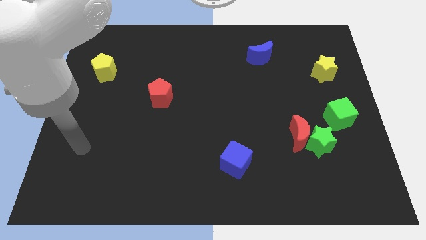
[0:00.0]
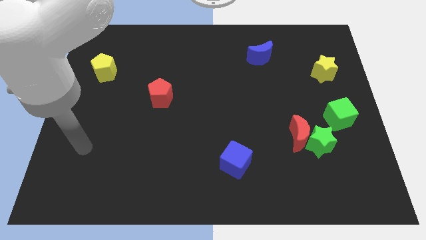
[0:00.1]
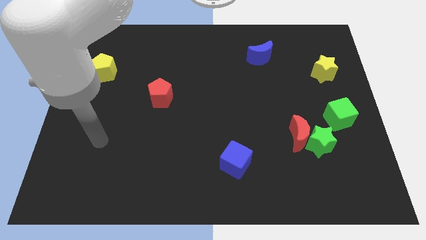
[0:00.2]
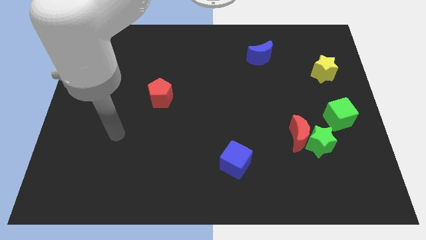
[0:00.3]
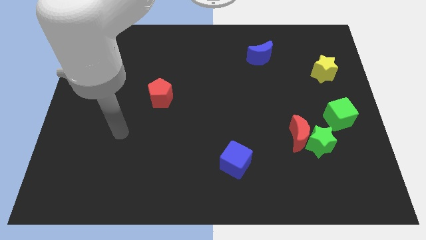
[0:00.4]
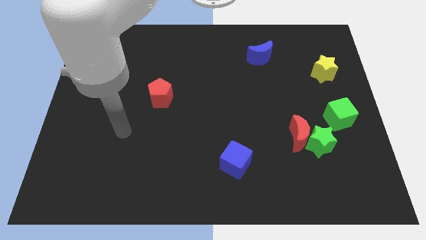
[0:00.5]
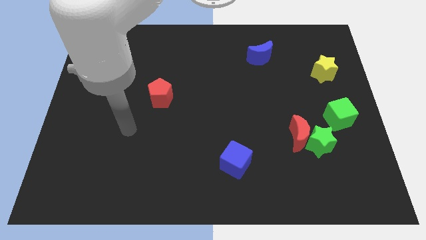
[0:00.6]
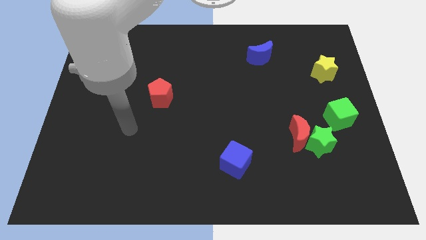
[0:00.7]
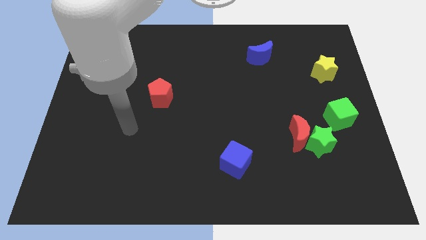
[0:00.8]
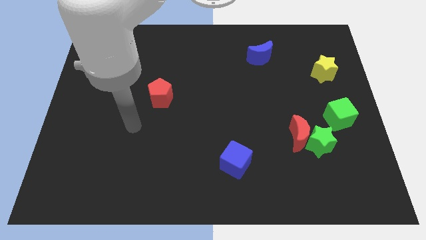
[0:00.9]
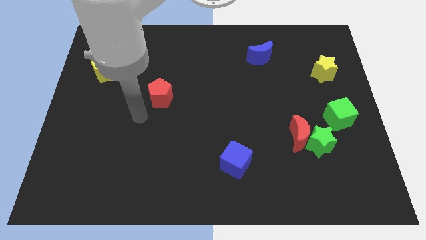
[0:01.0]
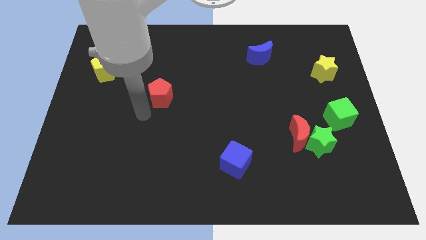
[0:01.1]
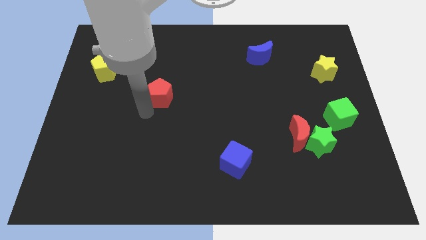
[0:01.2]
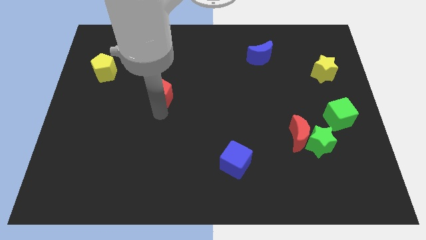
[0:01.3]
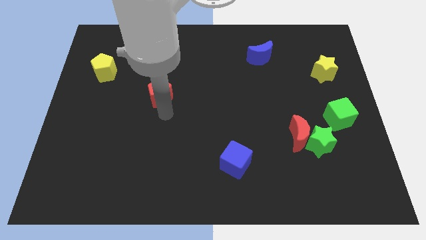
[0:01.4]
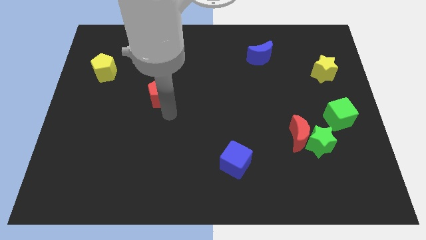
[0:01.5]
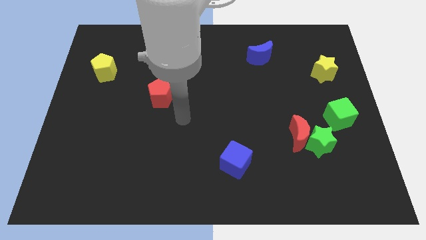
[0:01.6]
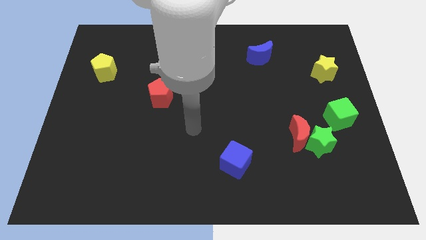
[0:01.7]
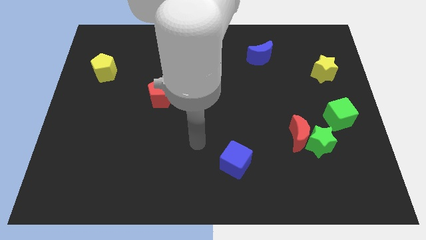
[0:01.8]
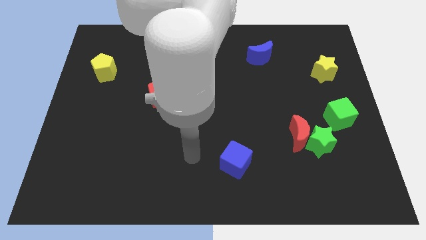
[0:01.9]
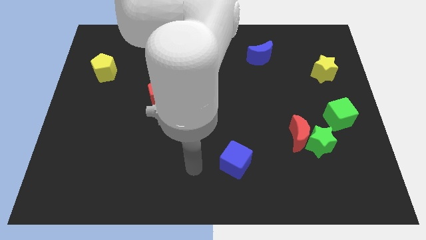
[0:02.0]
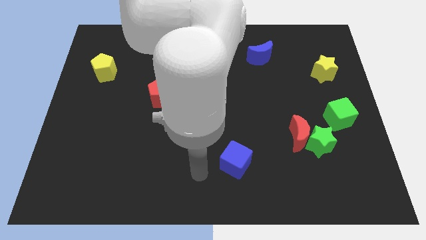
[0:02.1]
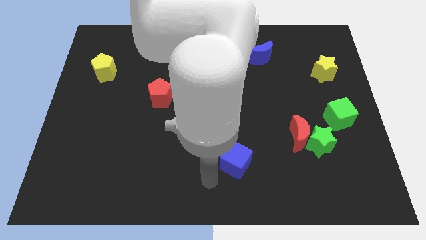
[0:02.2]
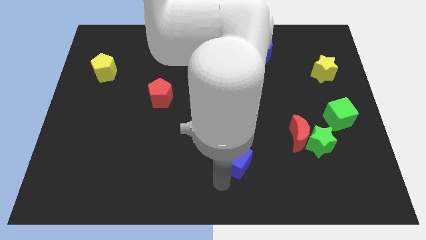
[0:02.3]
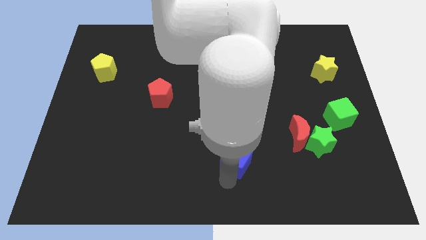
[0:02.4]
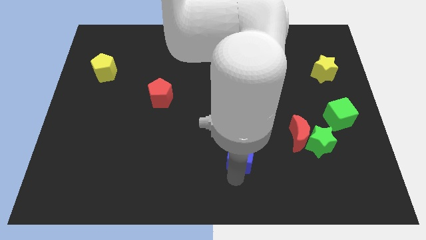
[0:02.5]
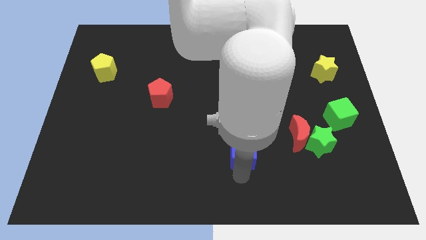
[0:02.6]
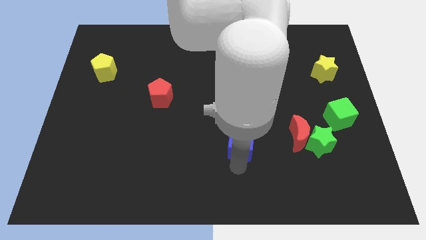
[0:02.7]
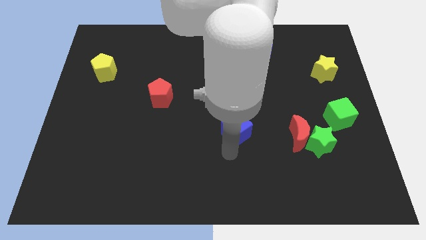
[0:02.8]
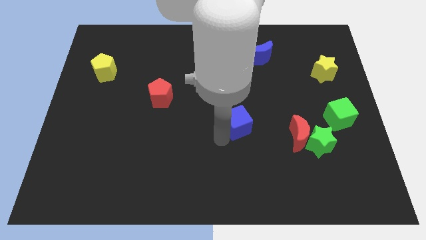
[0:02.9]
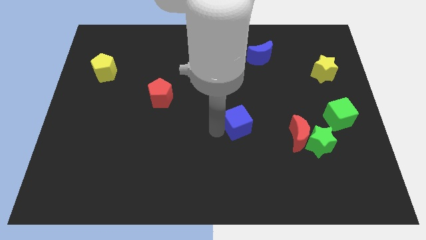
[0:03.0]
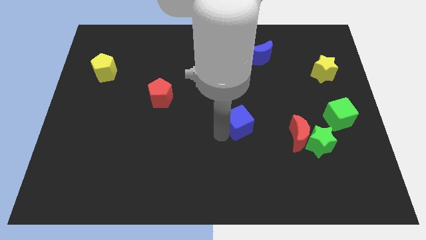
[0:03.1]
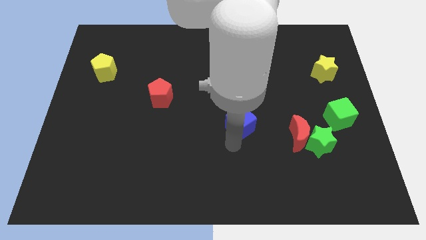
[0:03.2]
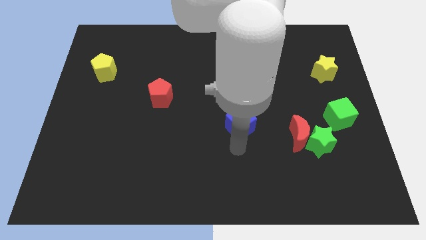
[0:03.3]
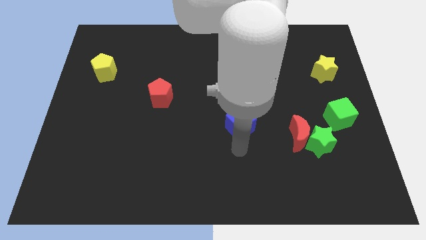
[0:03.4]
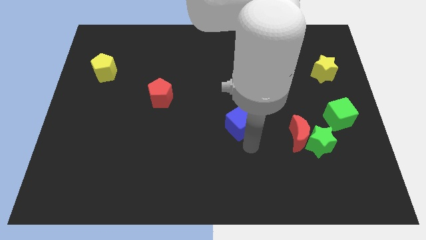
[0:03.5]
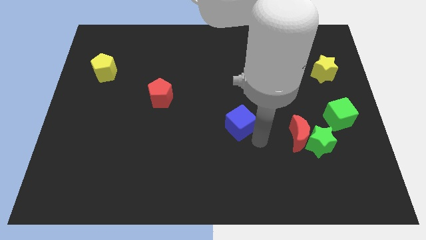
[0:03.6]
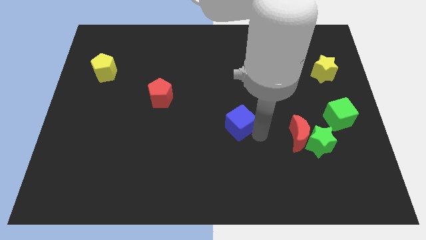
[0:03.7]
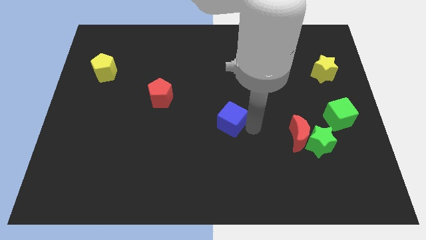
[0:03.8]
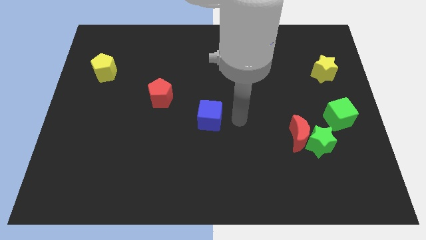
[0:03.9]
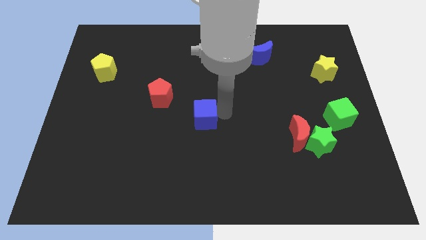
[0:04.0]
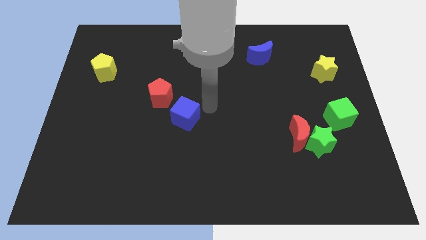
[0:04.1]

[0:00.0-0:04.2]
place blue cube close to red pentagon

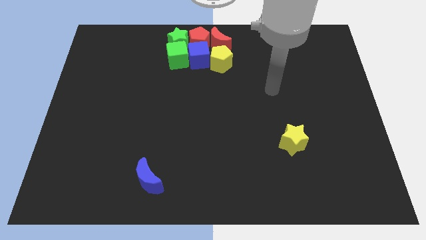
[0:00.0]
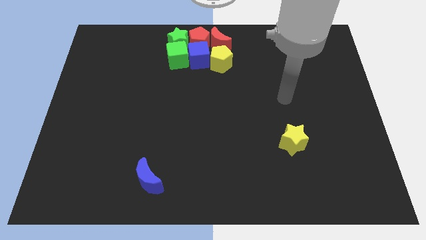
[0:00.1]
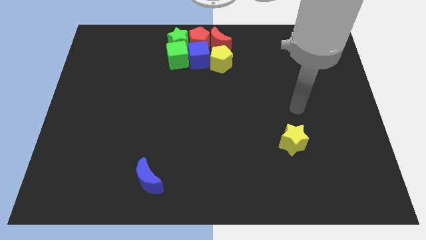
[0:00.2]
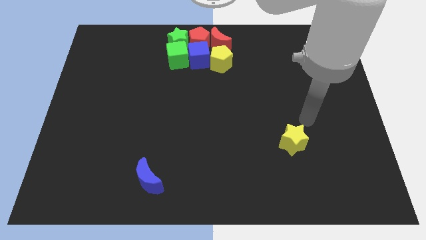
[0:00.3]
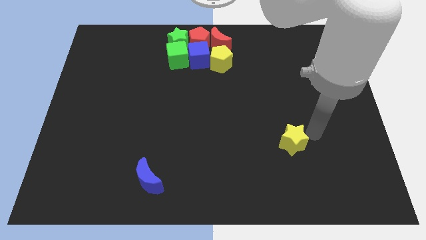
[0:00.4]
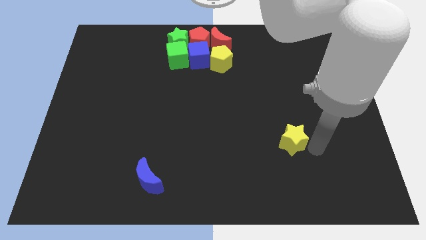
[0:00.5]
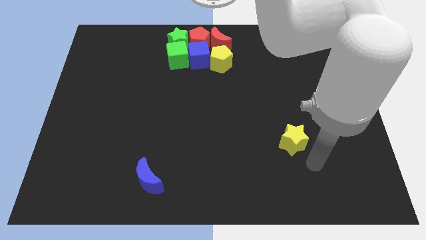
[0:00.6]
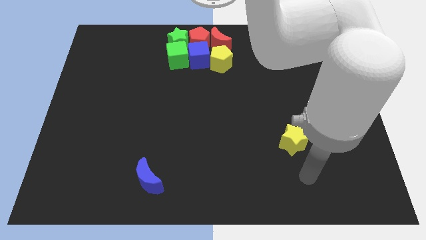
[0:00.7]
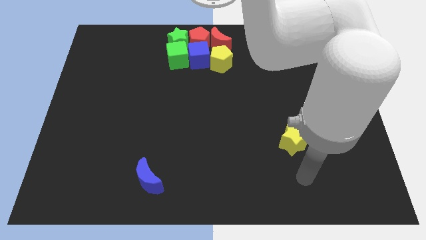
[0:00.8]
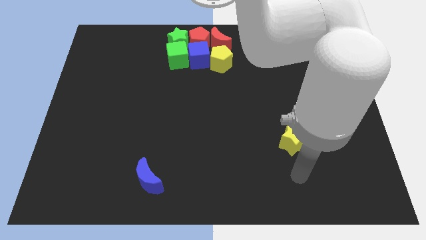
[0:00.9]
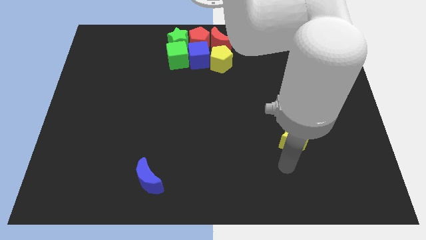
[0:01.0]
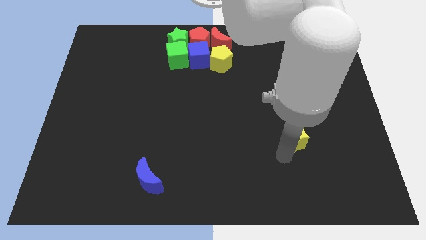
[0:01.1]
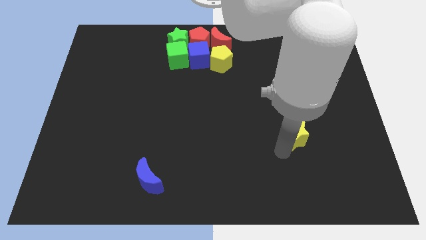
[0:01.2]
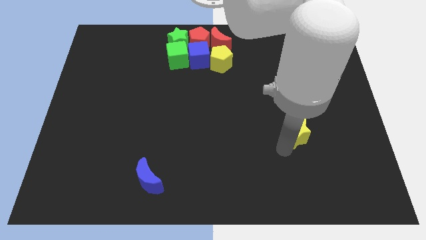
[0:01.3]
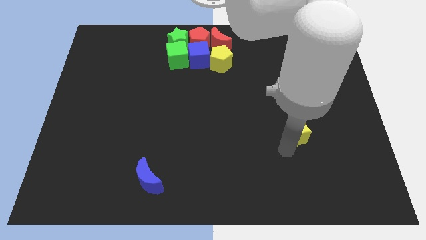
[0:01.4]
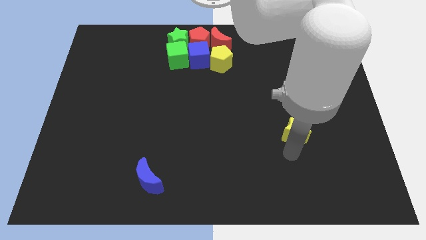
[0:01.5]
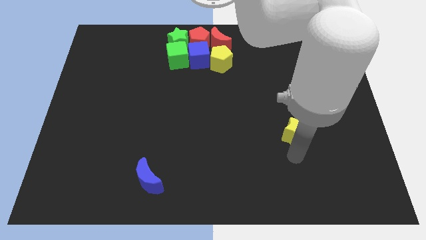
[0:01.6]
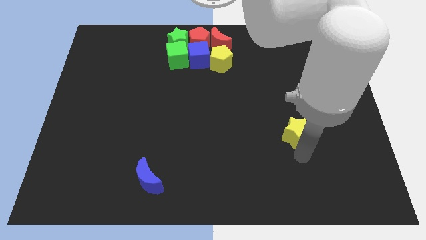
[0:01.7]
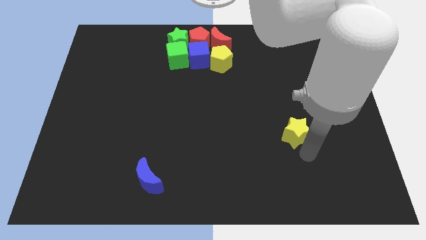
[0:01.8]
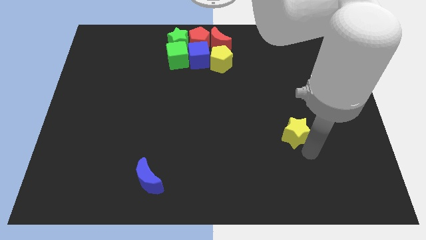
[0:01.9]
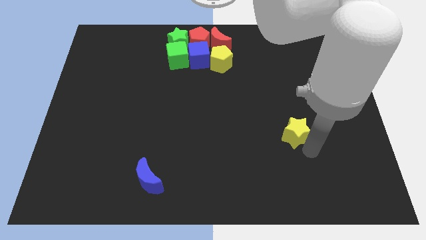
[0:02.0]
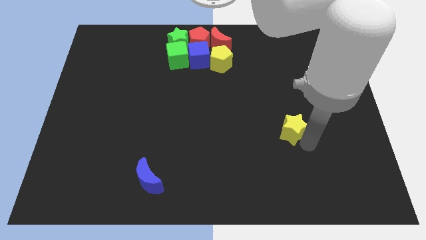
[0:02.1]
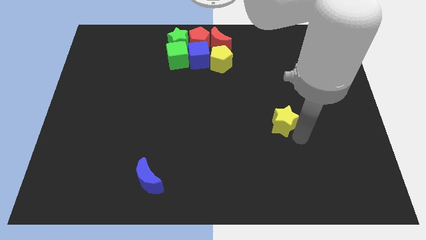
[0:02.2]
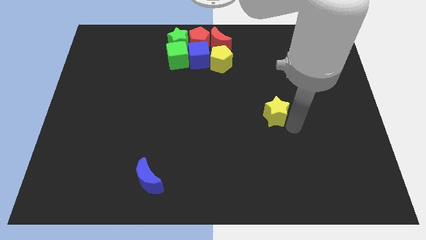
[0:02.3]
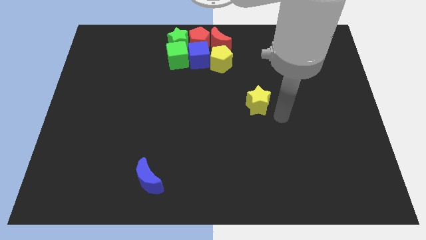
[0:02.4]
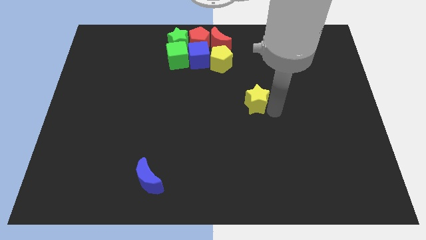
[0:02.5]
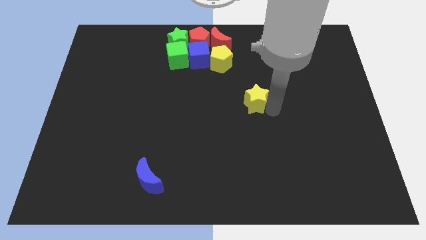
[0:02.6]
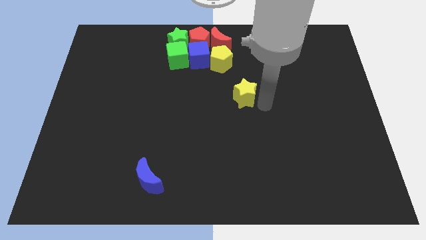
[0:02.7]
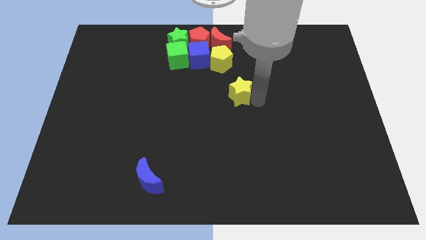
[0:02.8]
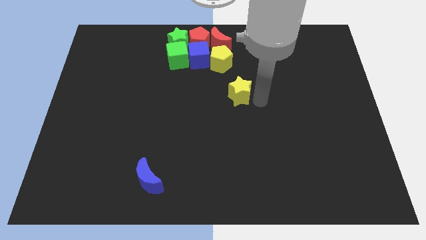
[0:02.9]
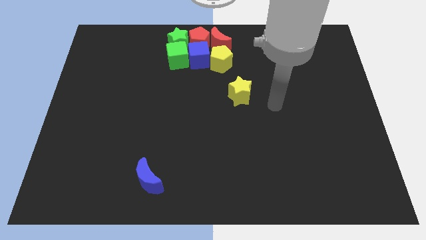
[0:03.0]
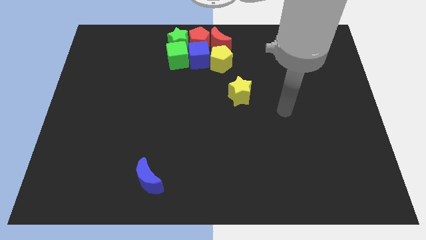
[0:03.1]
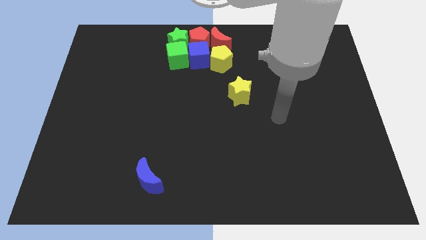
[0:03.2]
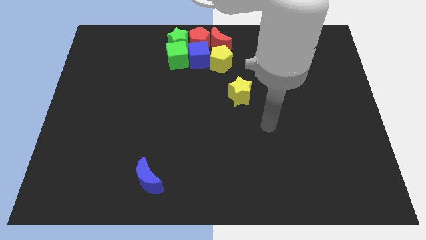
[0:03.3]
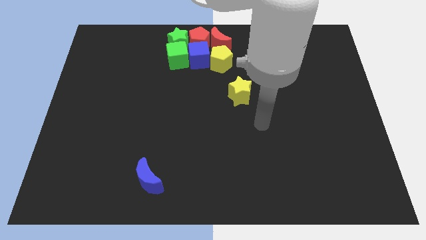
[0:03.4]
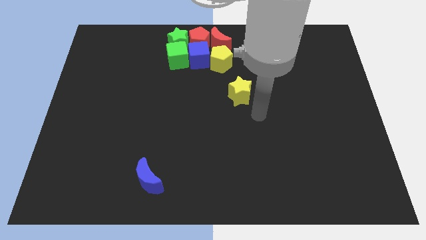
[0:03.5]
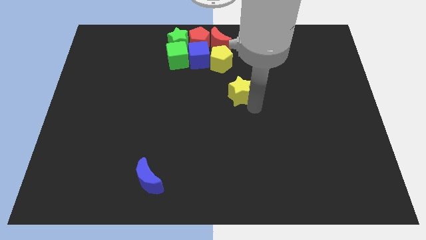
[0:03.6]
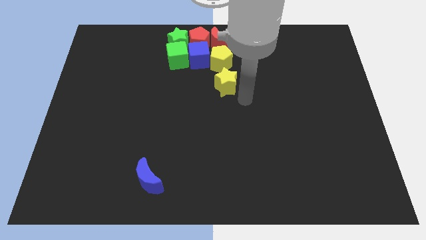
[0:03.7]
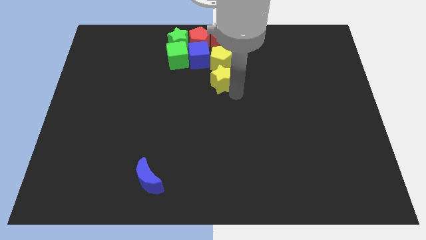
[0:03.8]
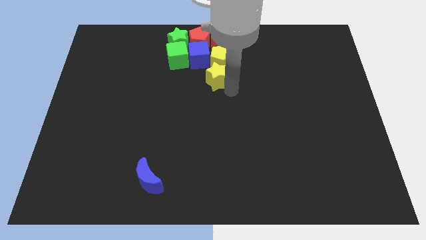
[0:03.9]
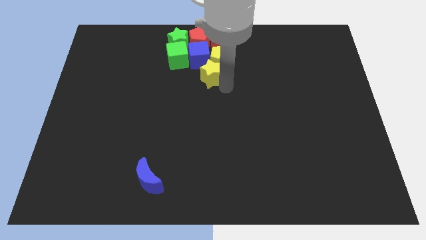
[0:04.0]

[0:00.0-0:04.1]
place yellow star below yellow pentagon

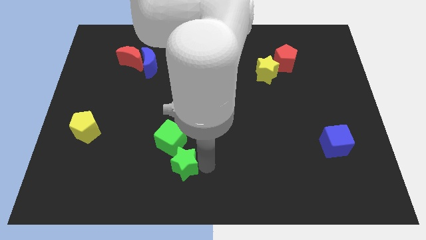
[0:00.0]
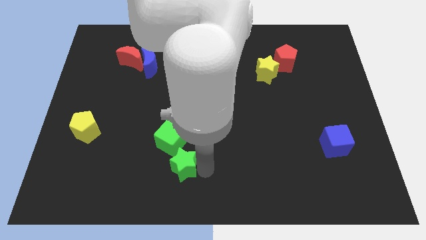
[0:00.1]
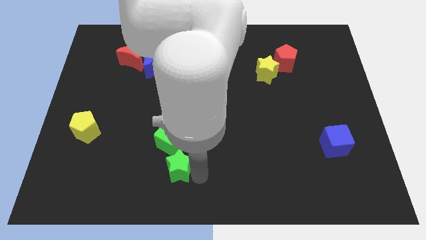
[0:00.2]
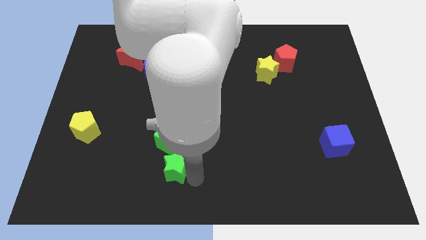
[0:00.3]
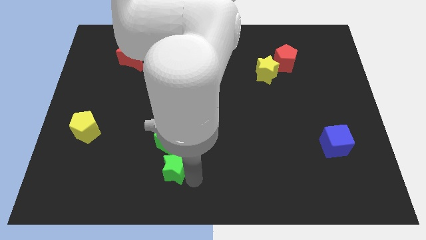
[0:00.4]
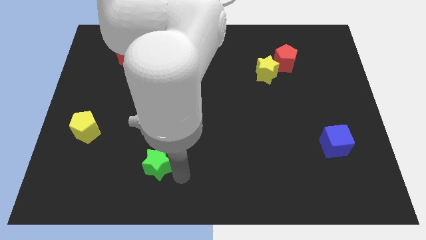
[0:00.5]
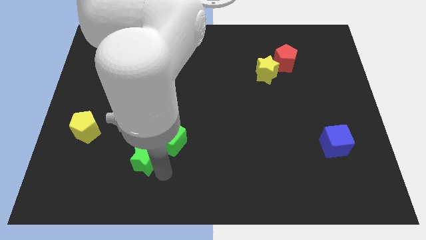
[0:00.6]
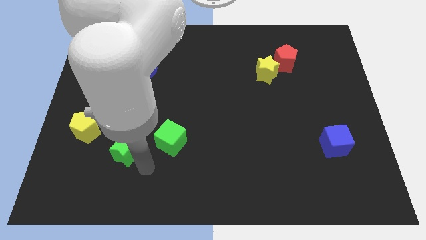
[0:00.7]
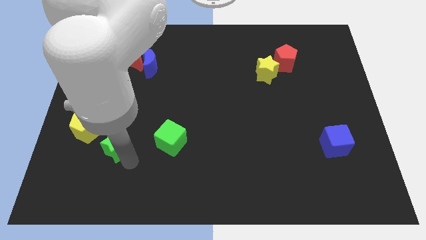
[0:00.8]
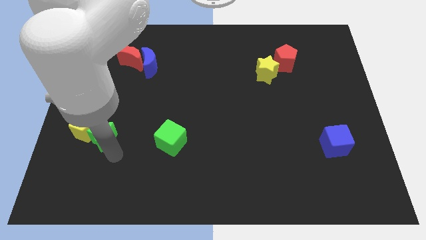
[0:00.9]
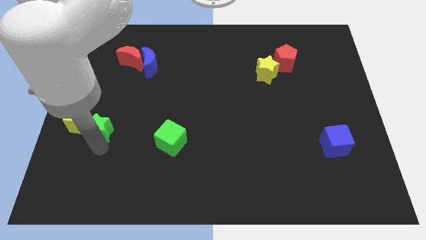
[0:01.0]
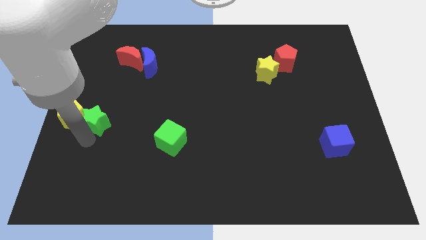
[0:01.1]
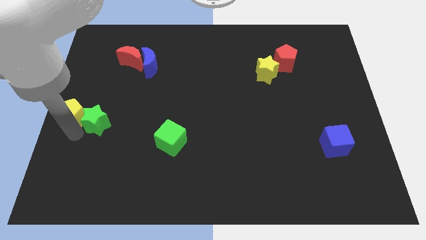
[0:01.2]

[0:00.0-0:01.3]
push the green star into the yellow pentagon
